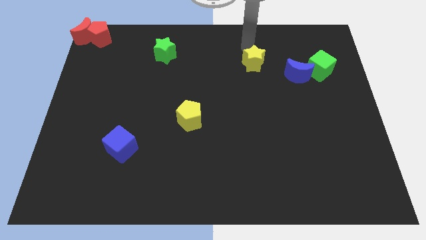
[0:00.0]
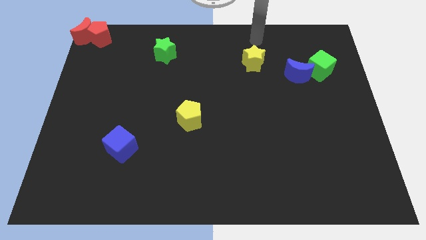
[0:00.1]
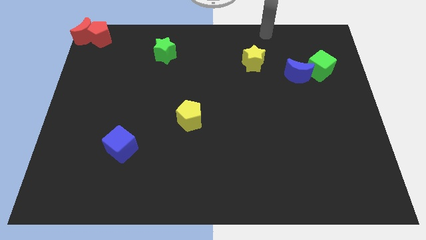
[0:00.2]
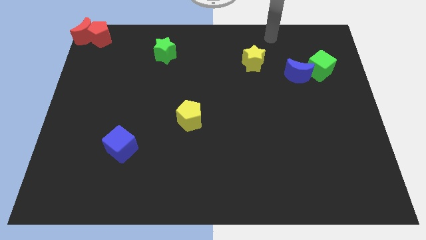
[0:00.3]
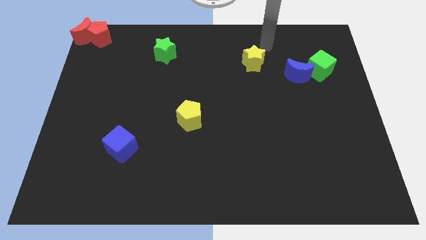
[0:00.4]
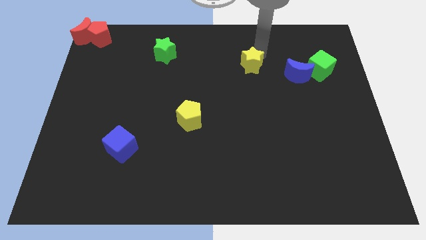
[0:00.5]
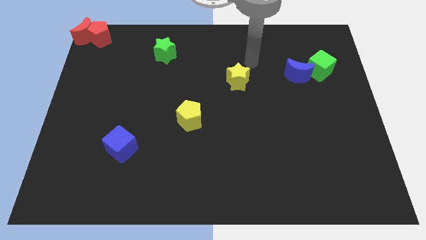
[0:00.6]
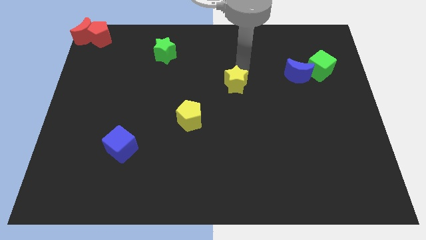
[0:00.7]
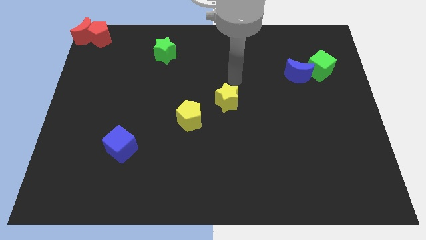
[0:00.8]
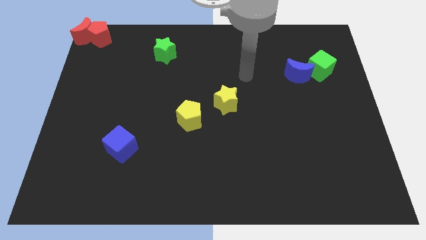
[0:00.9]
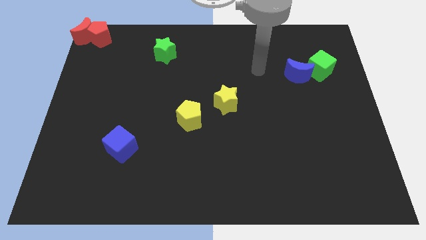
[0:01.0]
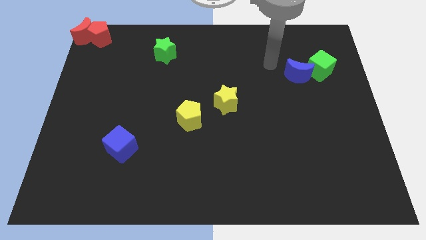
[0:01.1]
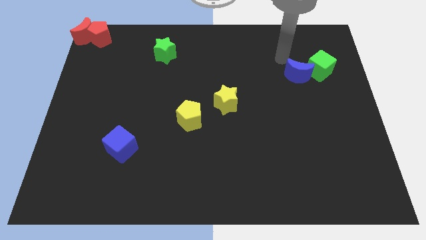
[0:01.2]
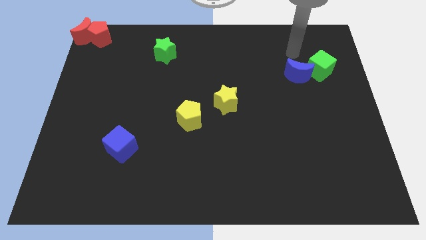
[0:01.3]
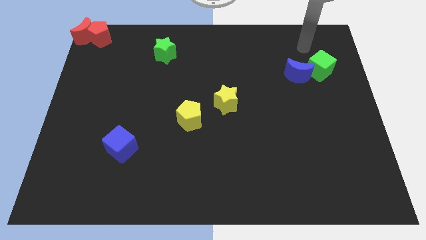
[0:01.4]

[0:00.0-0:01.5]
push the yellow star diagonally to the top right of the yellow pentagon

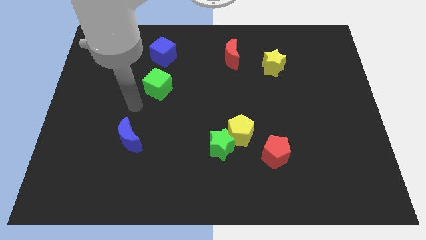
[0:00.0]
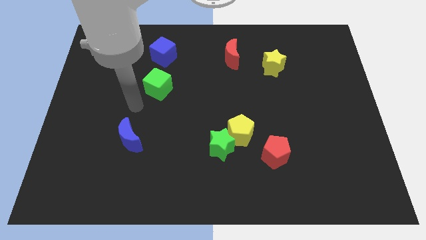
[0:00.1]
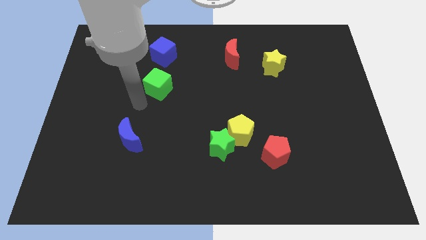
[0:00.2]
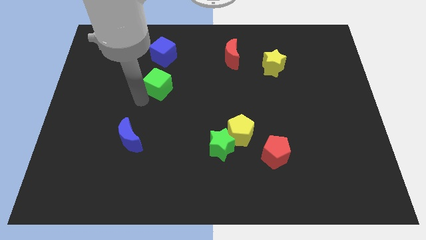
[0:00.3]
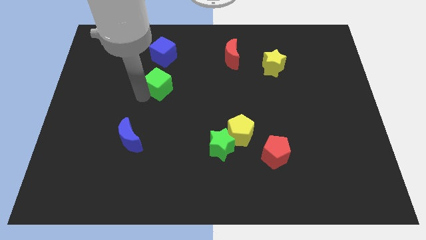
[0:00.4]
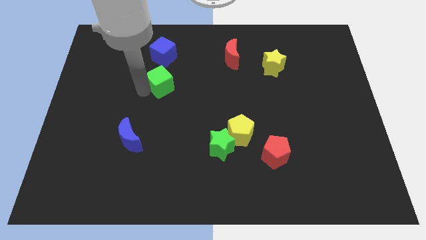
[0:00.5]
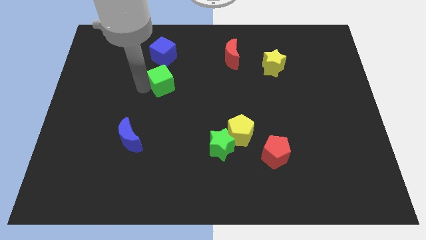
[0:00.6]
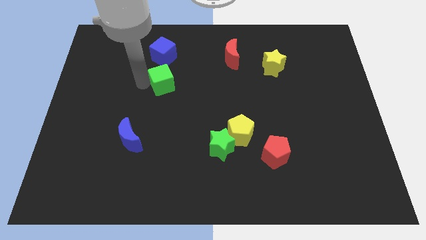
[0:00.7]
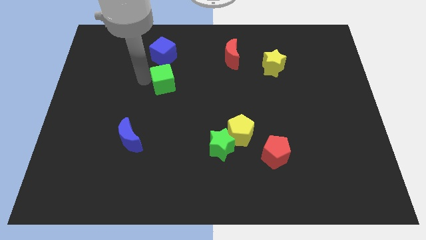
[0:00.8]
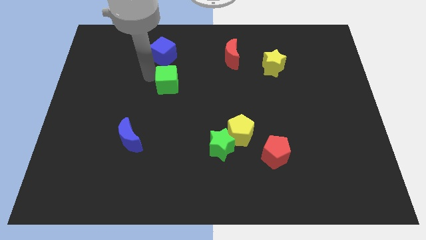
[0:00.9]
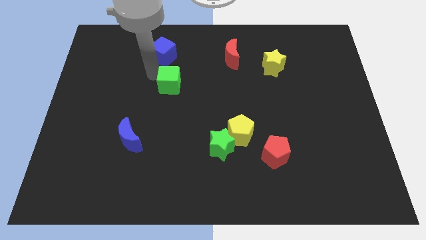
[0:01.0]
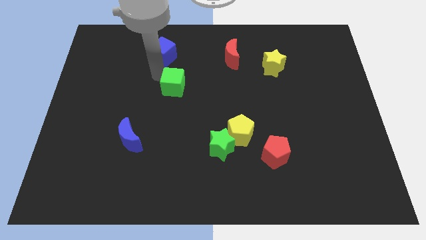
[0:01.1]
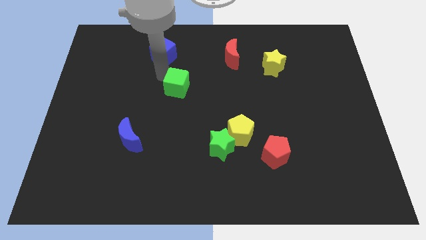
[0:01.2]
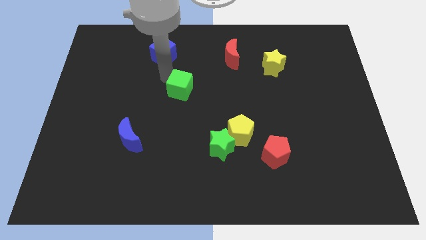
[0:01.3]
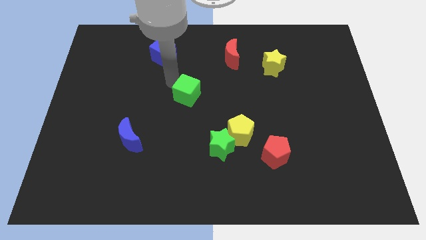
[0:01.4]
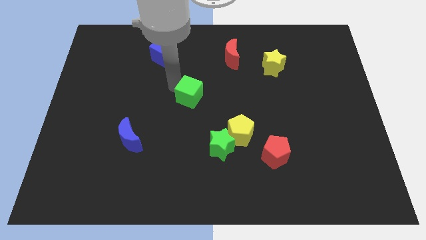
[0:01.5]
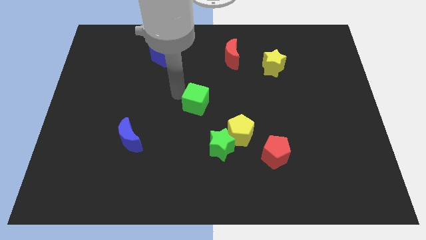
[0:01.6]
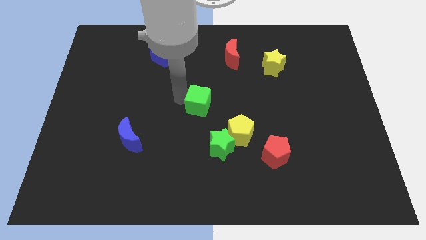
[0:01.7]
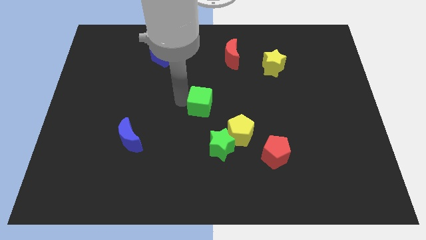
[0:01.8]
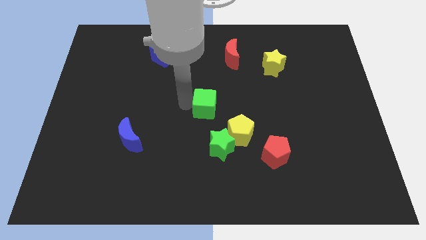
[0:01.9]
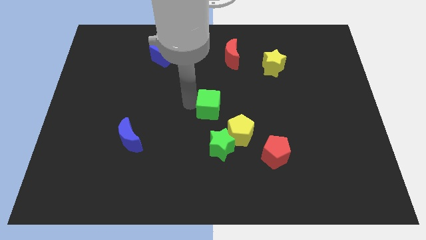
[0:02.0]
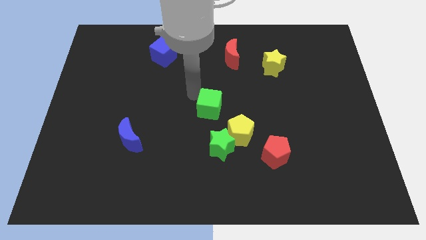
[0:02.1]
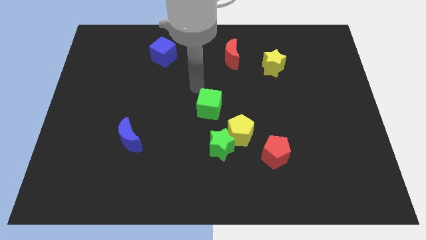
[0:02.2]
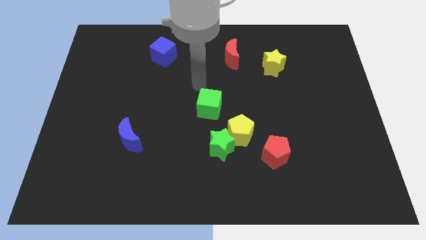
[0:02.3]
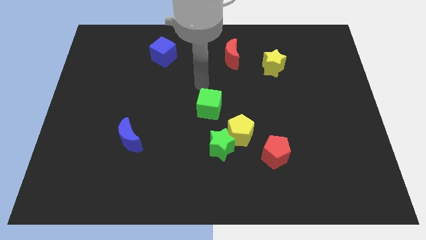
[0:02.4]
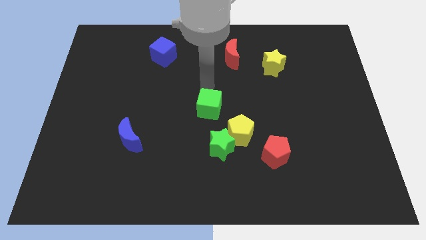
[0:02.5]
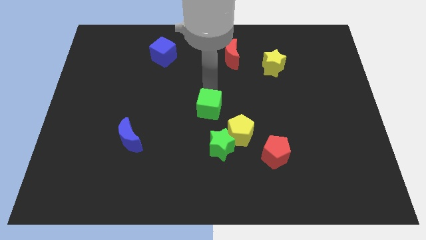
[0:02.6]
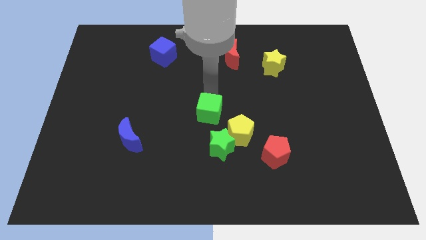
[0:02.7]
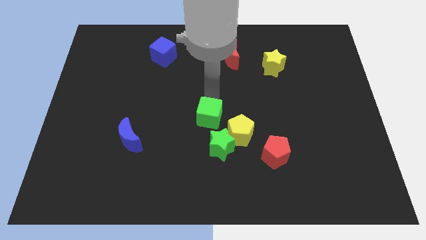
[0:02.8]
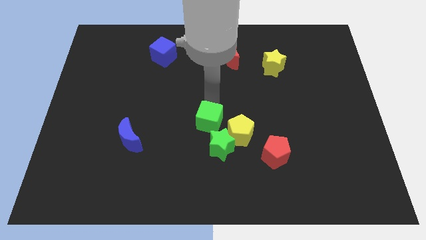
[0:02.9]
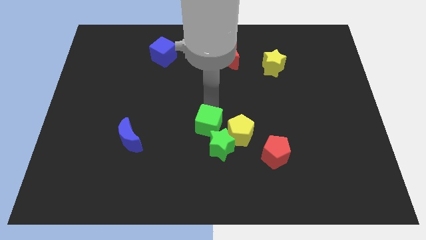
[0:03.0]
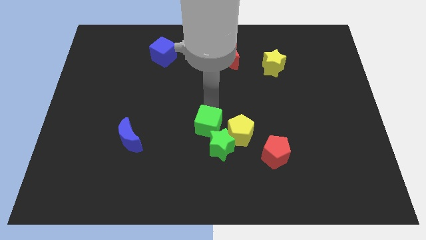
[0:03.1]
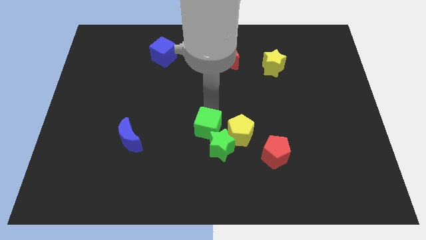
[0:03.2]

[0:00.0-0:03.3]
push the green cube into the green star

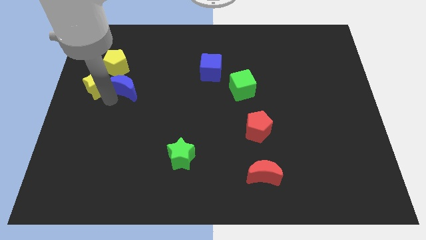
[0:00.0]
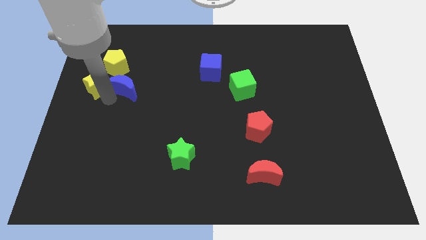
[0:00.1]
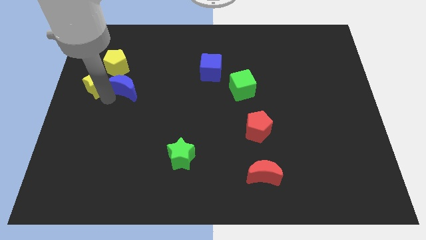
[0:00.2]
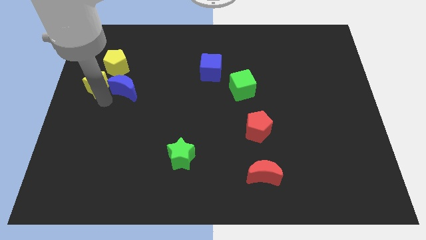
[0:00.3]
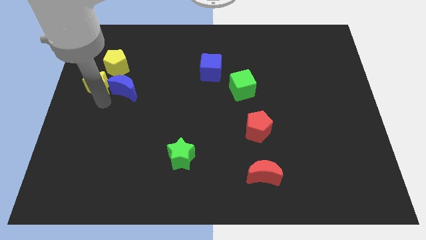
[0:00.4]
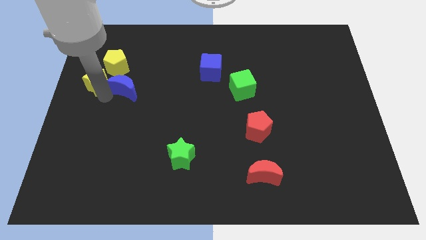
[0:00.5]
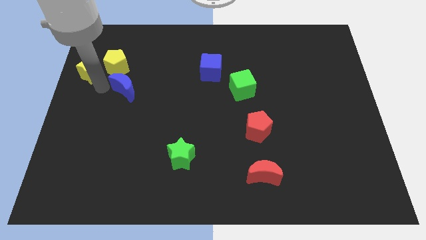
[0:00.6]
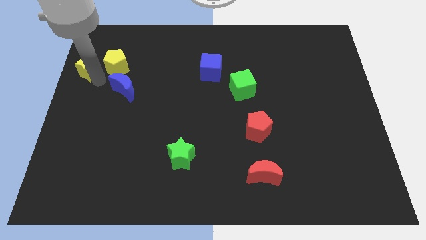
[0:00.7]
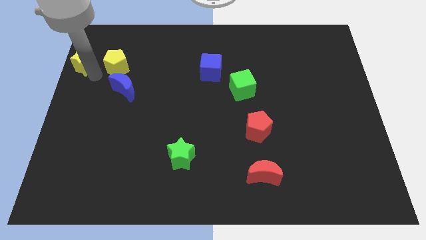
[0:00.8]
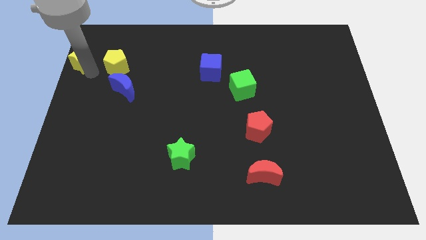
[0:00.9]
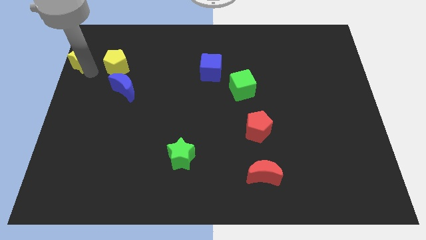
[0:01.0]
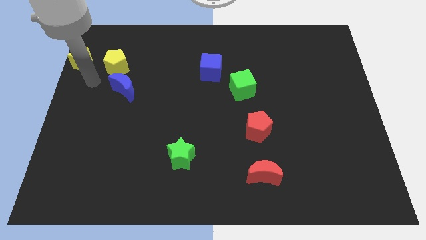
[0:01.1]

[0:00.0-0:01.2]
push yellow star diagonally up

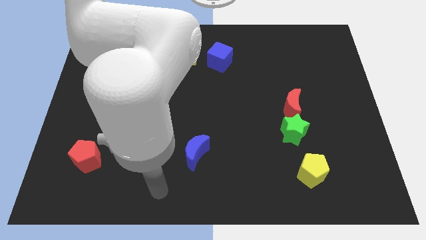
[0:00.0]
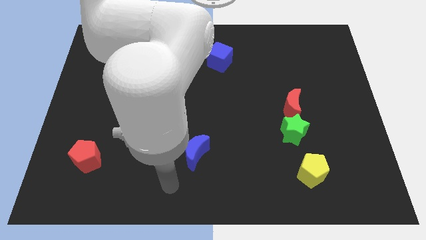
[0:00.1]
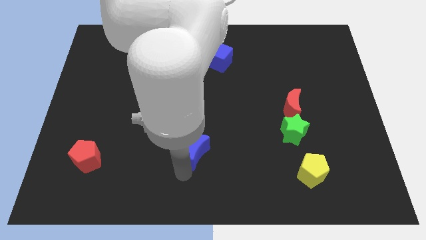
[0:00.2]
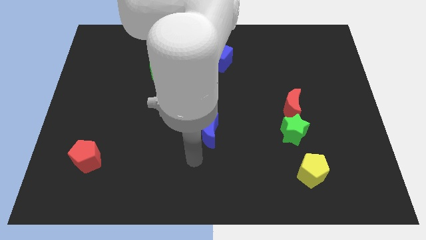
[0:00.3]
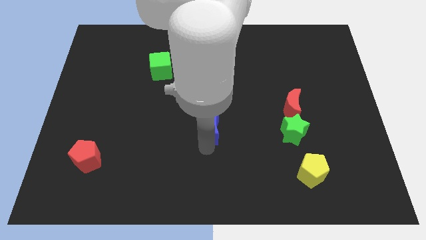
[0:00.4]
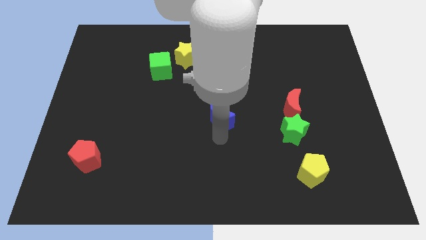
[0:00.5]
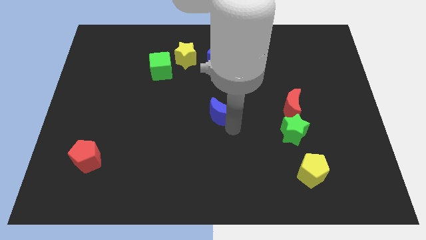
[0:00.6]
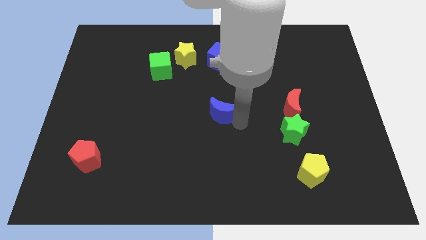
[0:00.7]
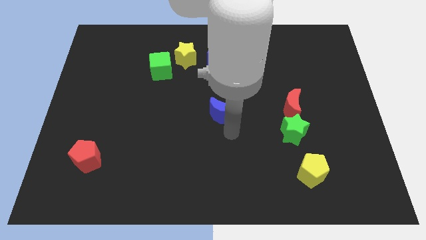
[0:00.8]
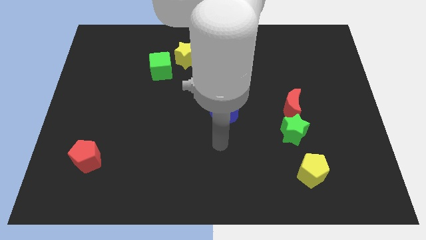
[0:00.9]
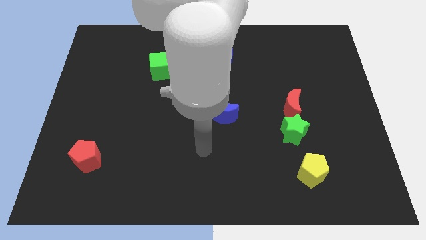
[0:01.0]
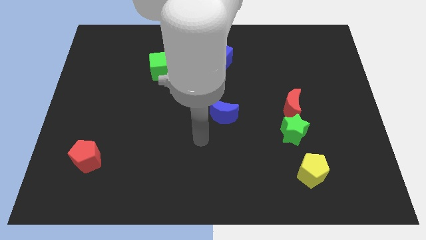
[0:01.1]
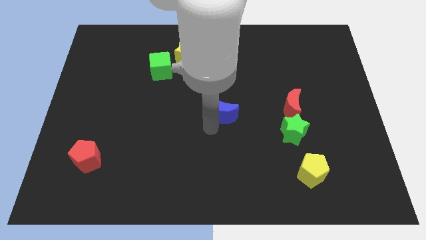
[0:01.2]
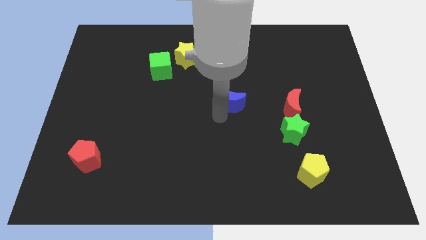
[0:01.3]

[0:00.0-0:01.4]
move the blue crescent to the left side of the red crescent

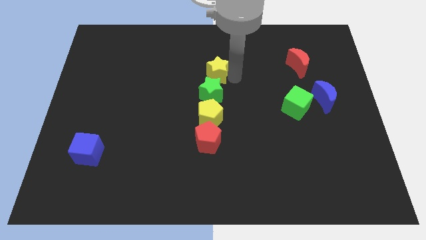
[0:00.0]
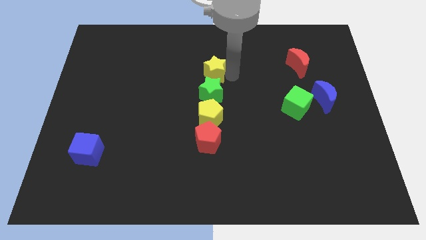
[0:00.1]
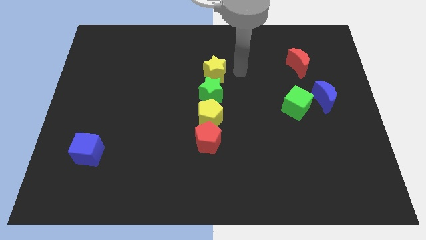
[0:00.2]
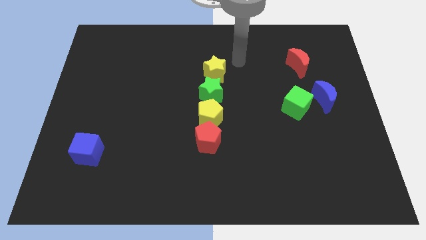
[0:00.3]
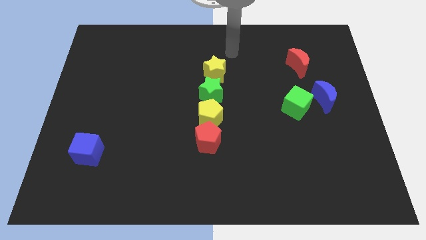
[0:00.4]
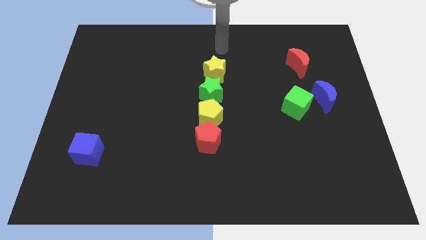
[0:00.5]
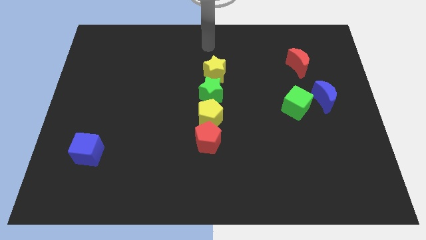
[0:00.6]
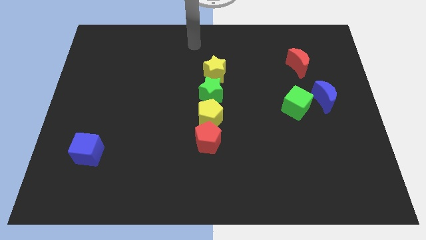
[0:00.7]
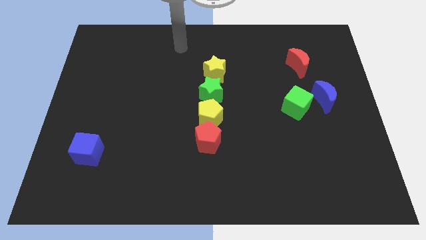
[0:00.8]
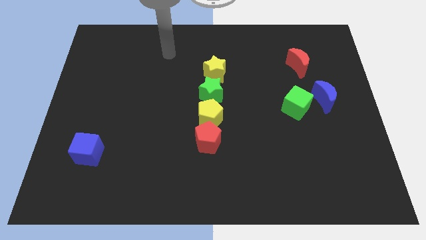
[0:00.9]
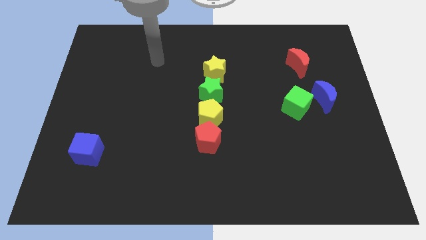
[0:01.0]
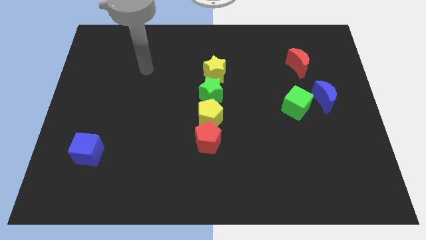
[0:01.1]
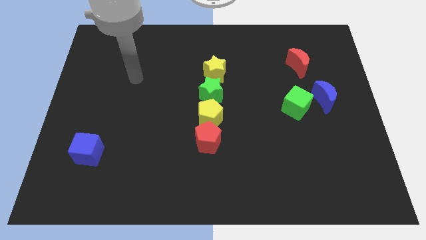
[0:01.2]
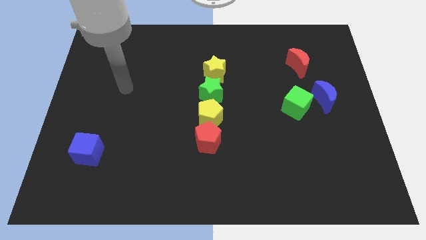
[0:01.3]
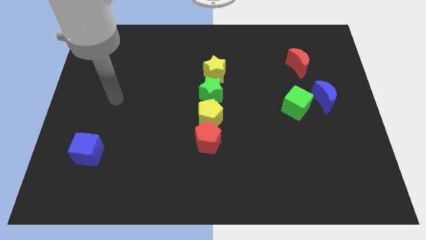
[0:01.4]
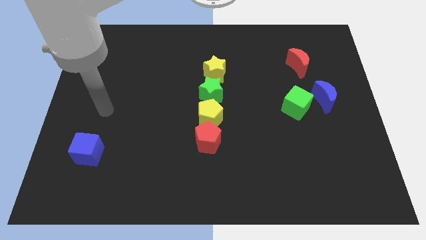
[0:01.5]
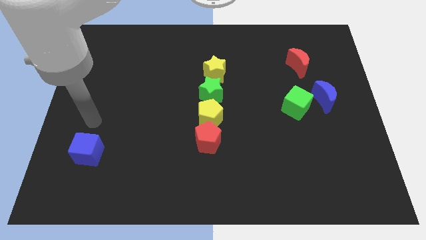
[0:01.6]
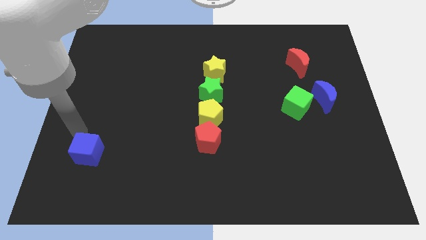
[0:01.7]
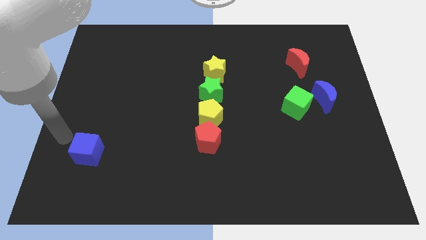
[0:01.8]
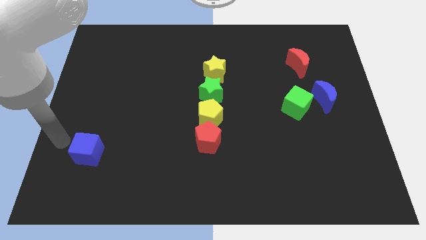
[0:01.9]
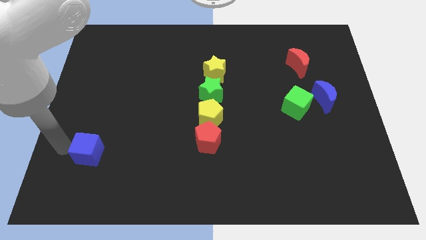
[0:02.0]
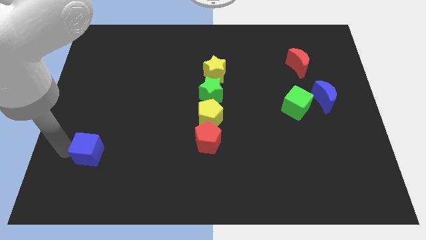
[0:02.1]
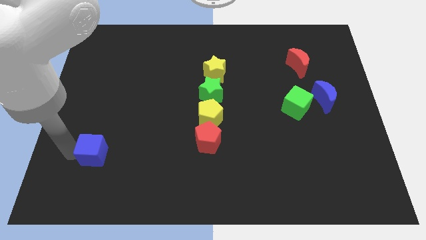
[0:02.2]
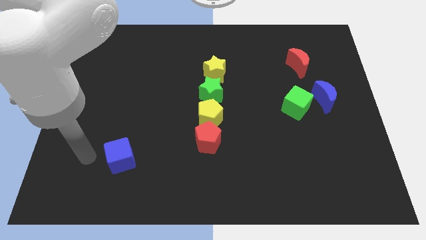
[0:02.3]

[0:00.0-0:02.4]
move the arm to the blue cube
